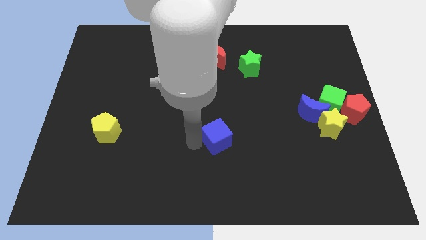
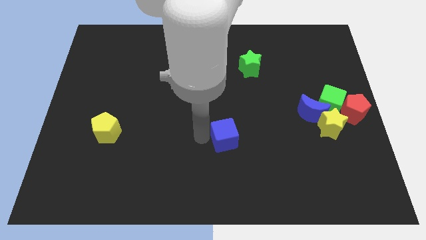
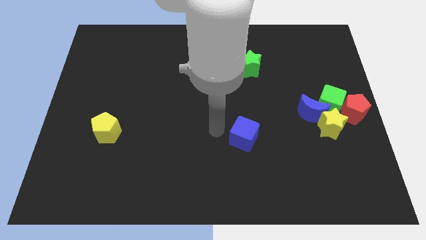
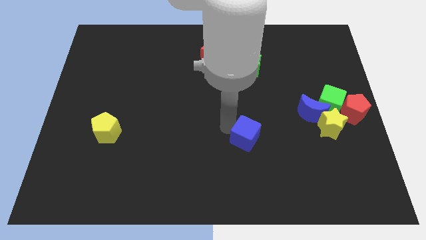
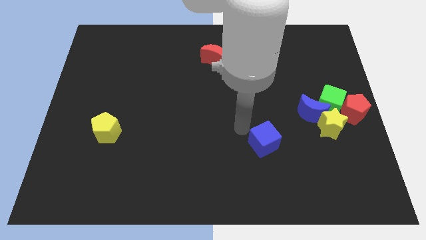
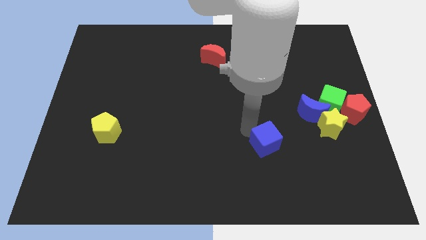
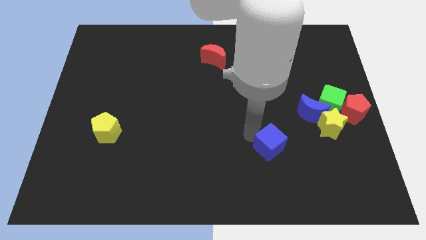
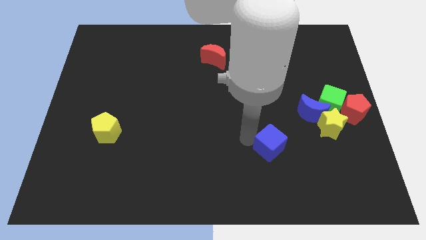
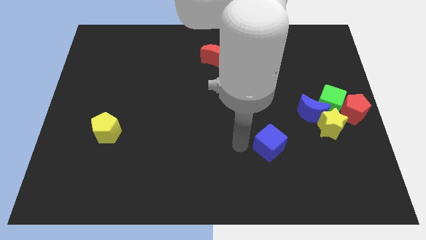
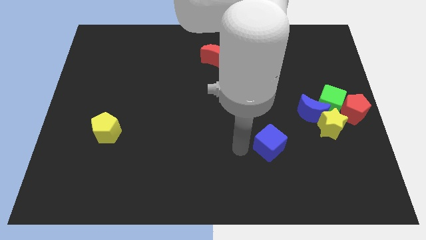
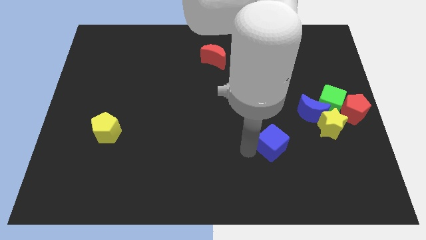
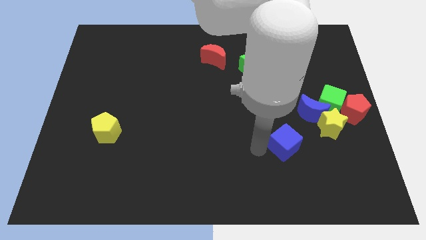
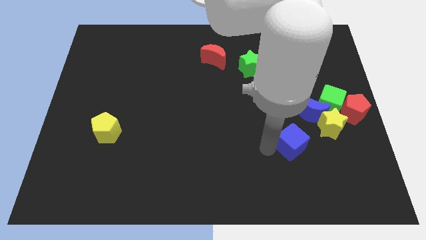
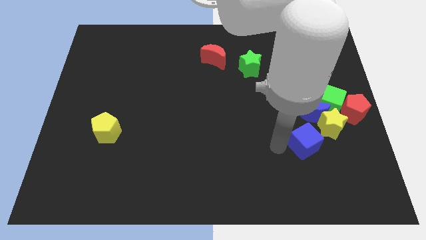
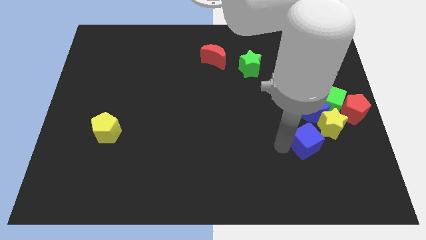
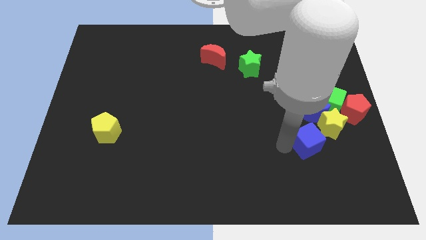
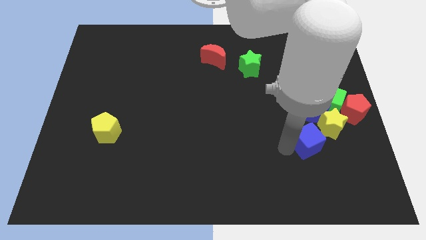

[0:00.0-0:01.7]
push the blue cube towards the yellow star

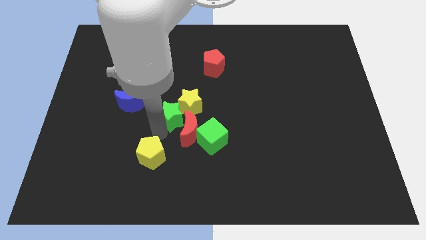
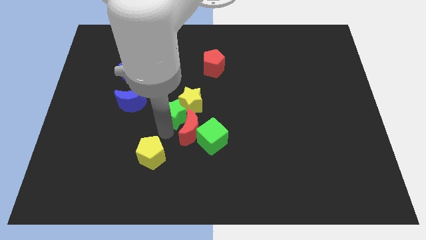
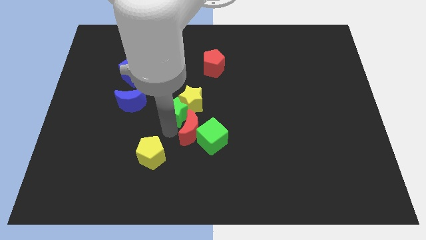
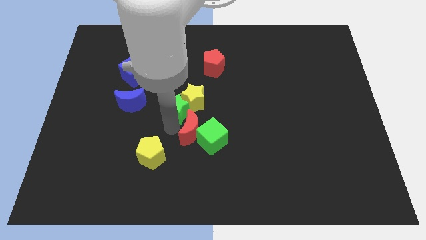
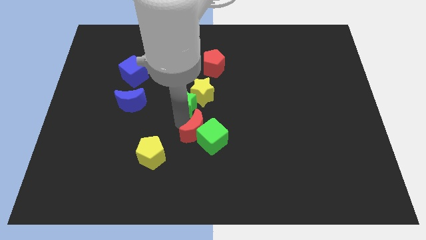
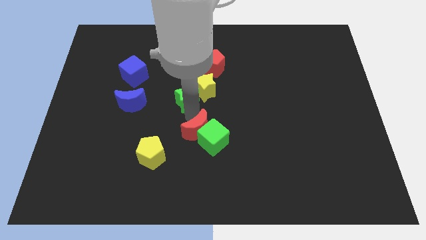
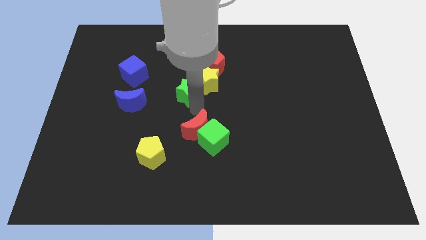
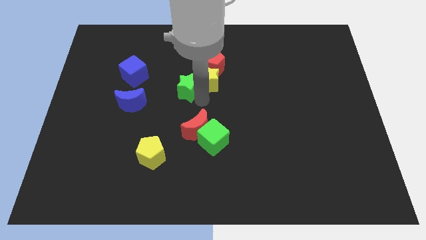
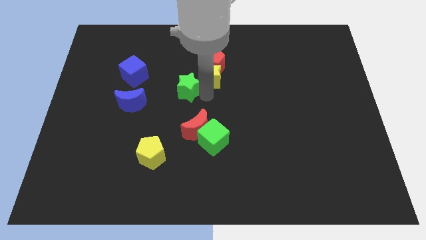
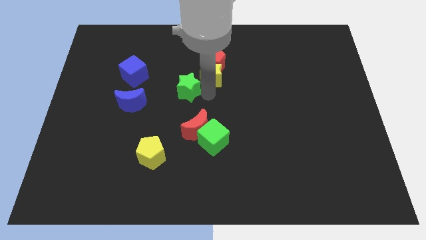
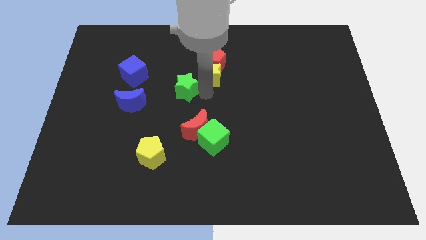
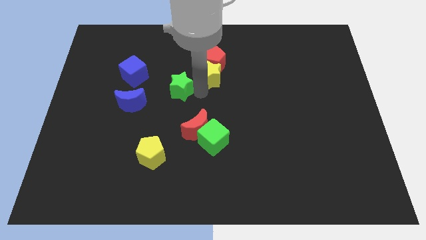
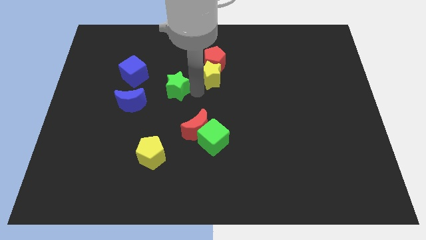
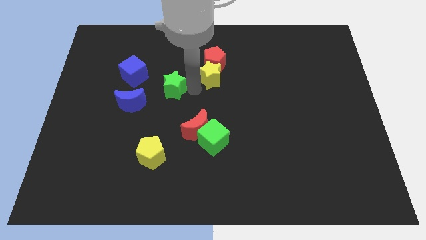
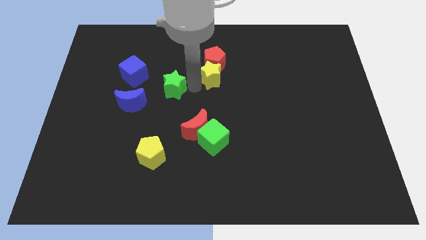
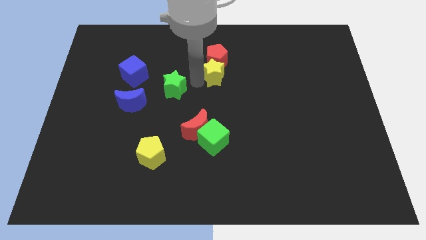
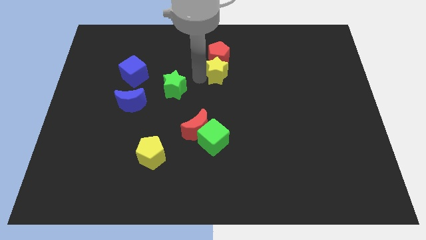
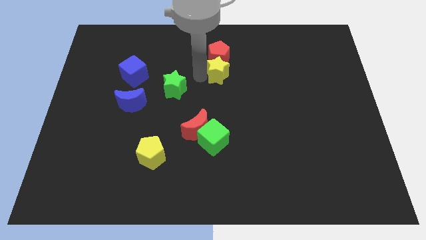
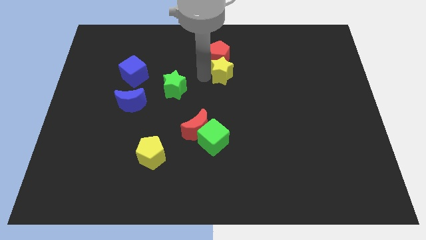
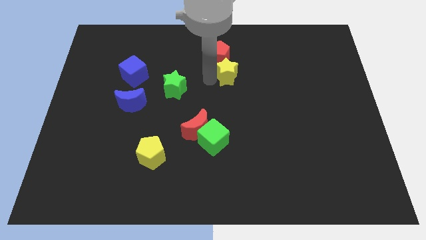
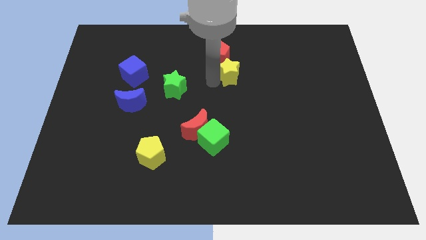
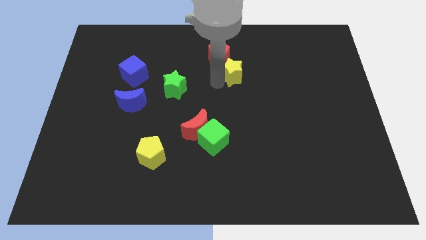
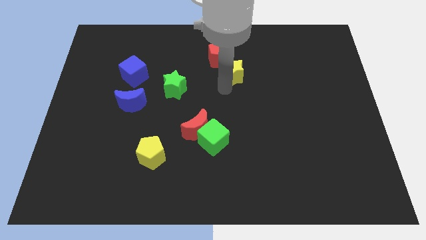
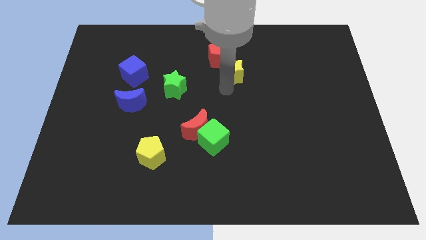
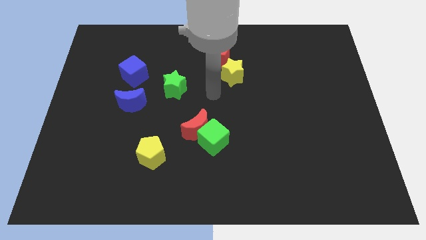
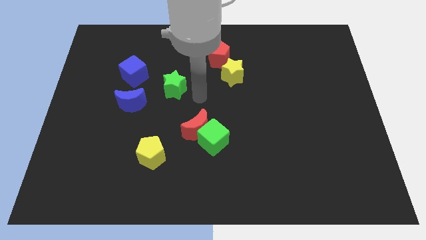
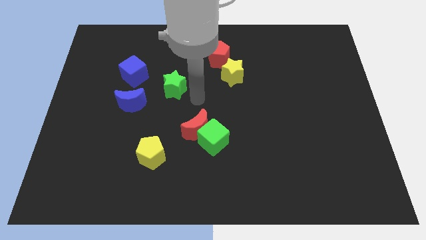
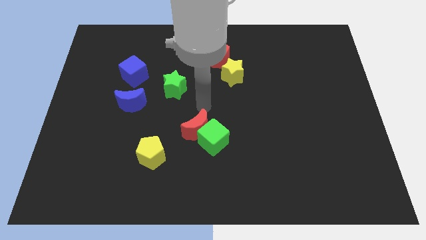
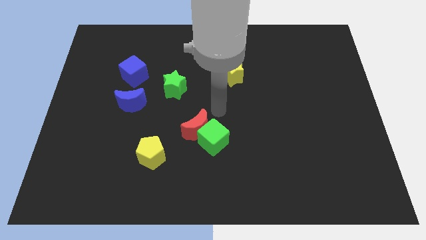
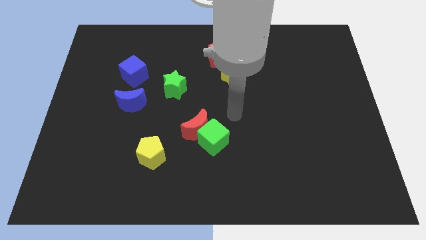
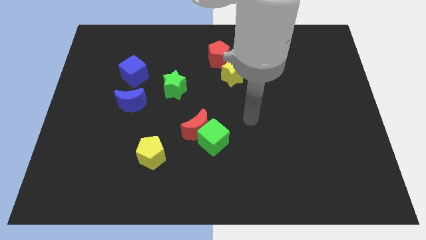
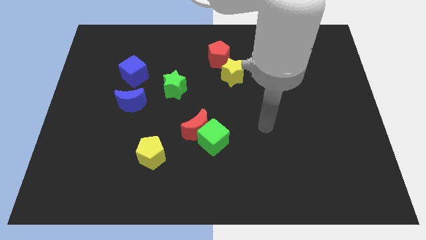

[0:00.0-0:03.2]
separate the yellow star from the green star

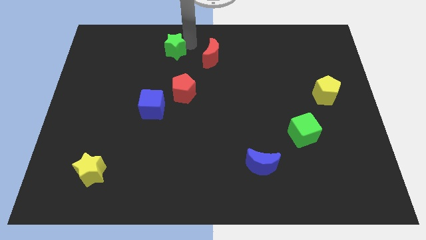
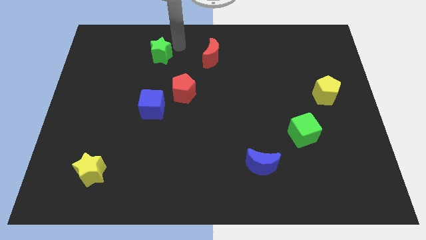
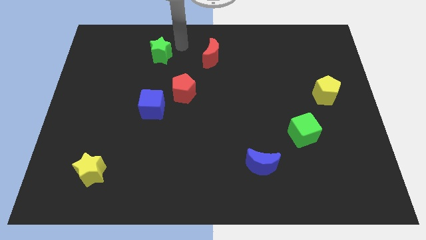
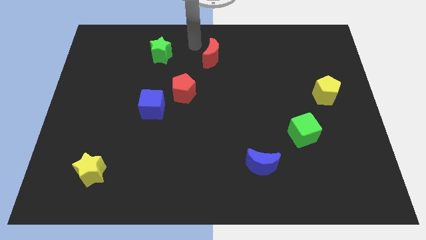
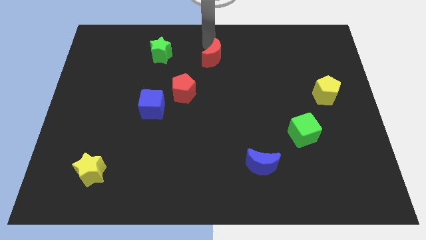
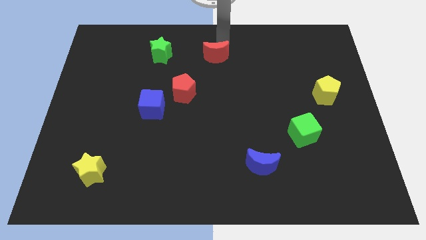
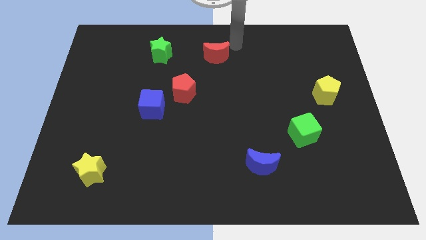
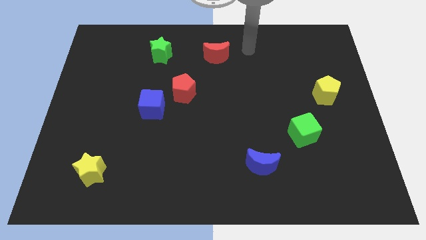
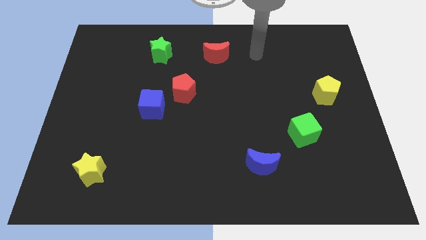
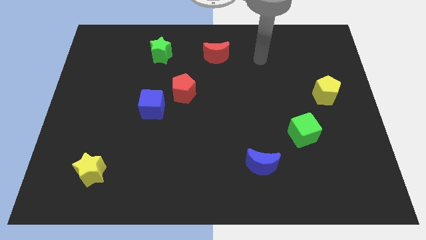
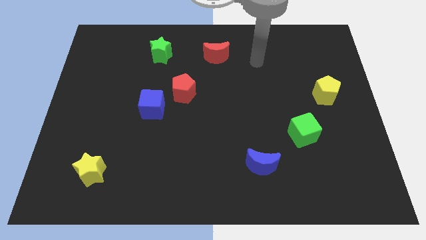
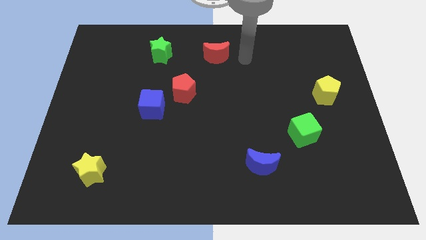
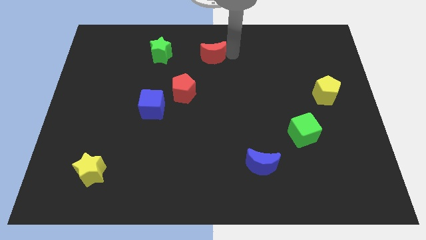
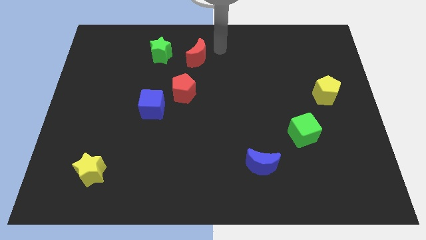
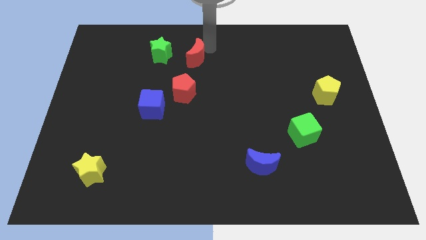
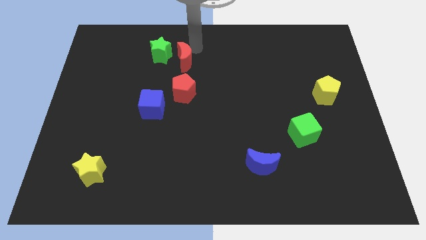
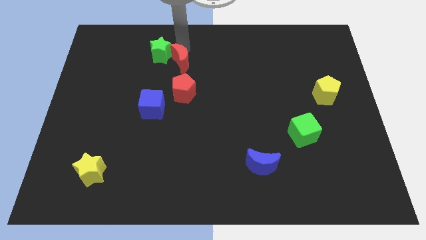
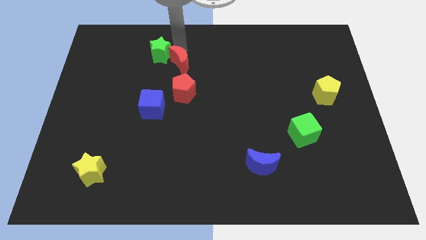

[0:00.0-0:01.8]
move red moon into green star

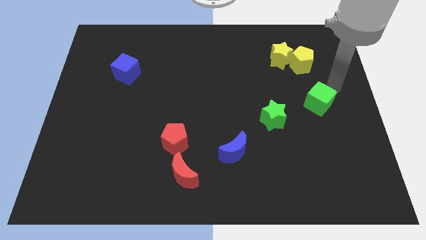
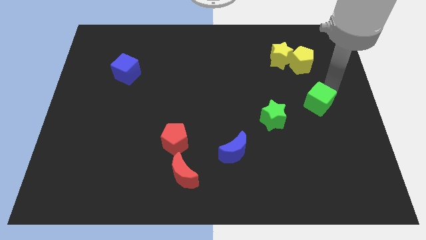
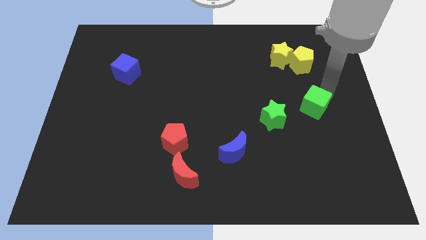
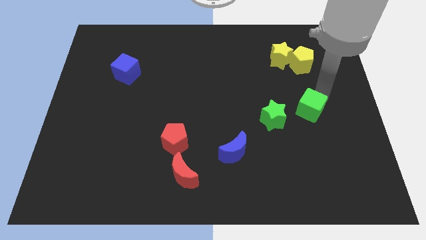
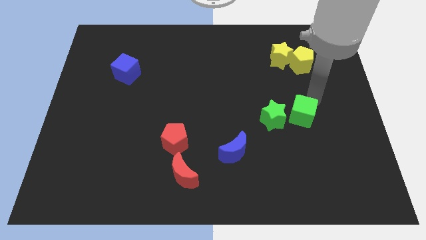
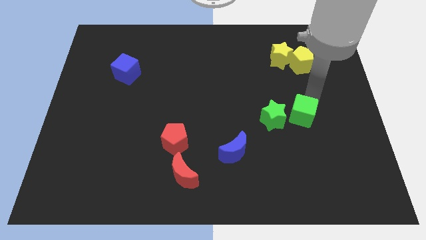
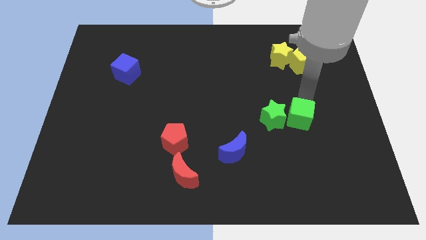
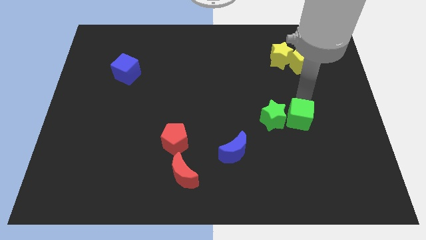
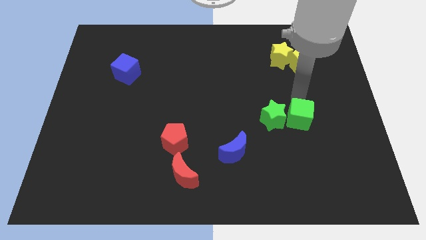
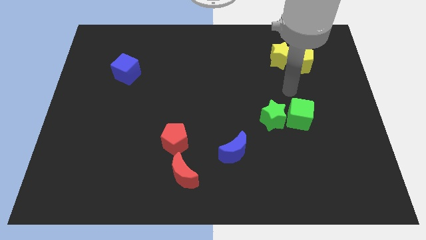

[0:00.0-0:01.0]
put green cube near green star

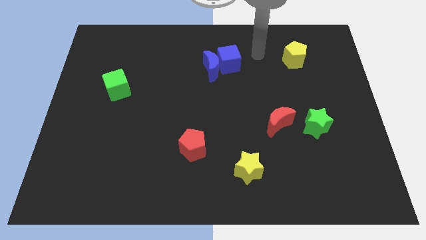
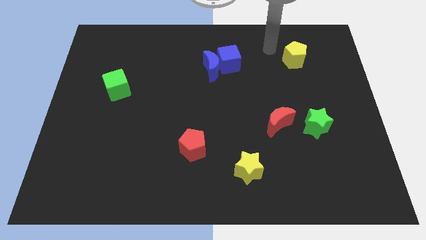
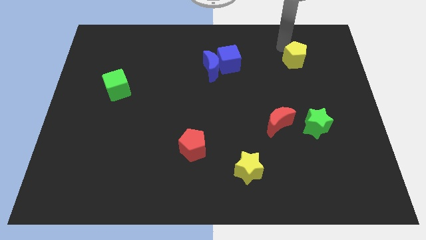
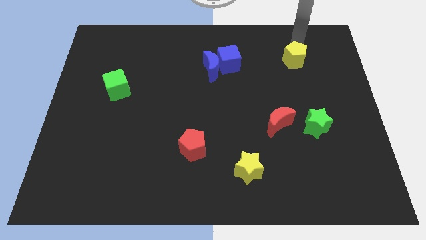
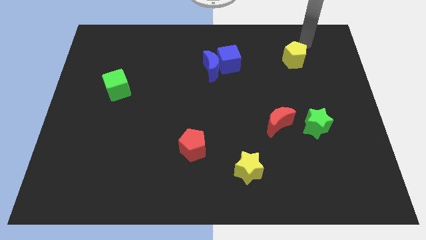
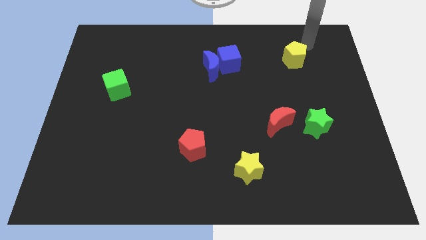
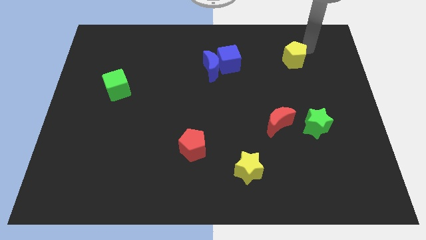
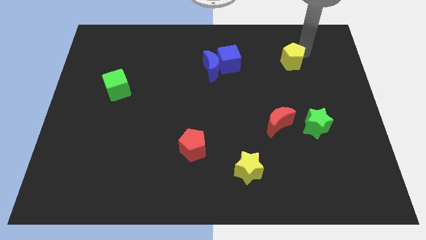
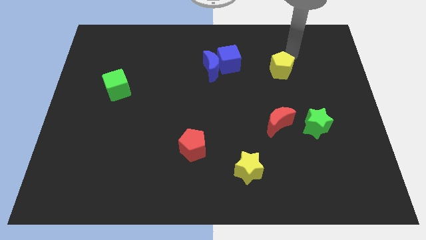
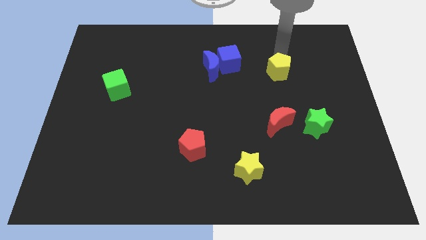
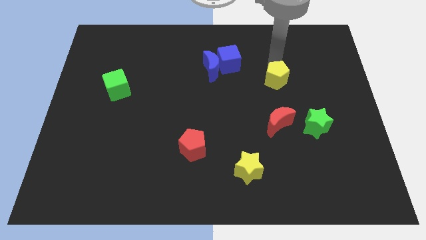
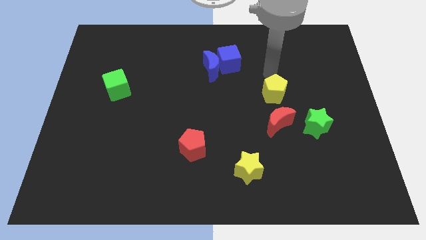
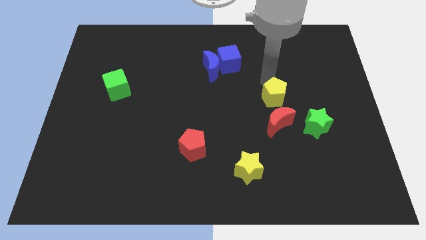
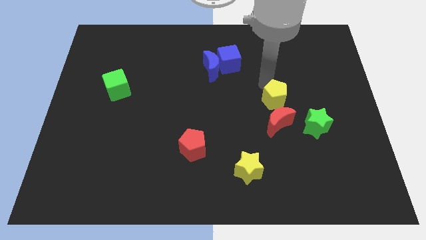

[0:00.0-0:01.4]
slide the yellow pentagon to the top side of the red crescent
